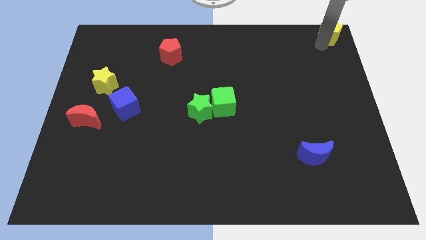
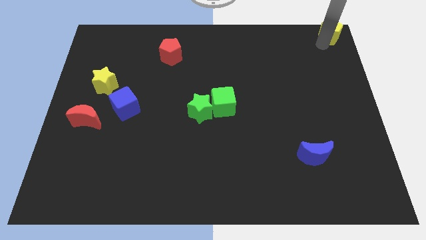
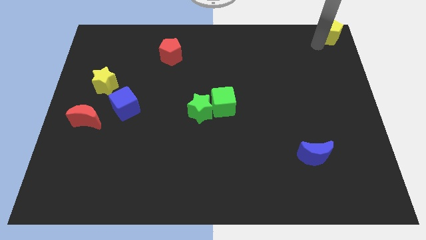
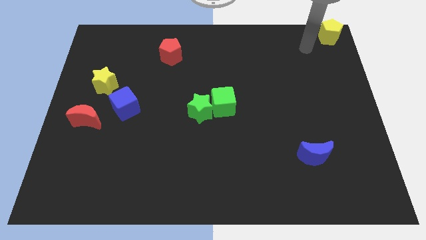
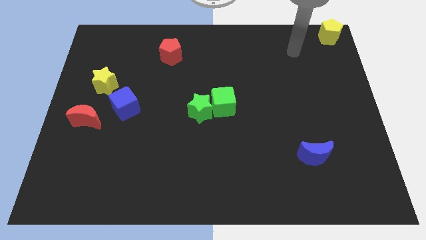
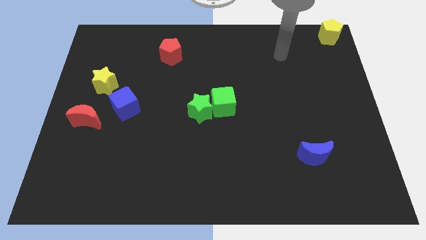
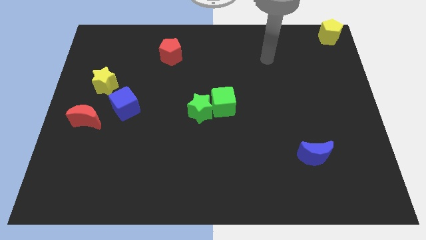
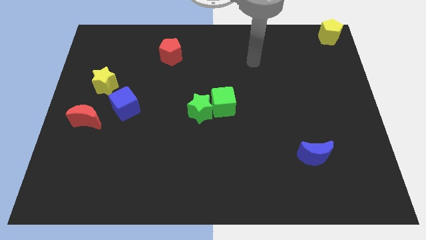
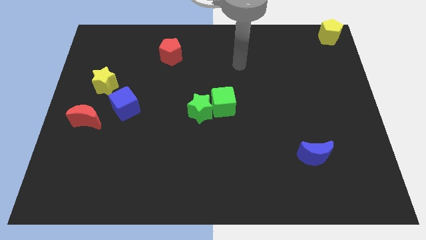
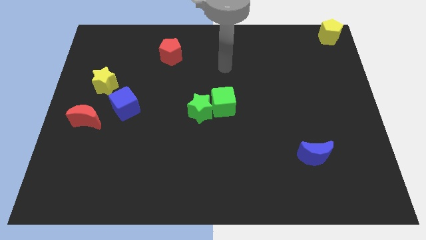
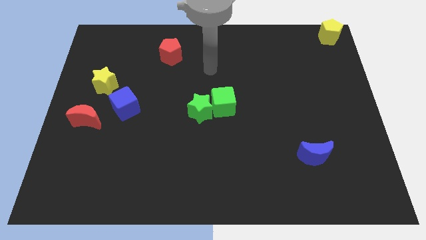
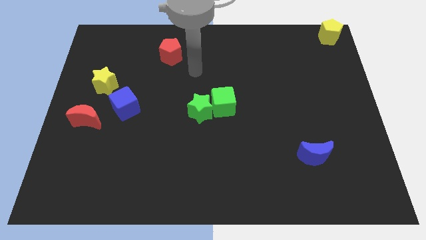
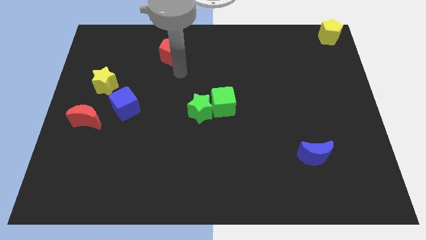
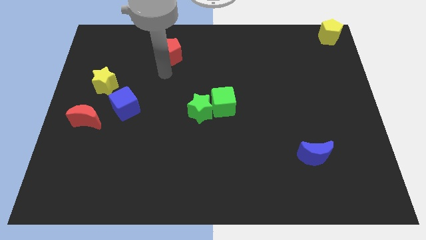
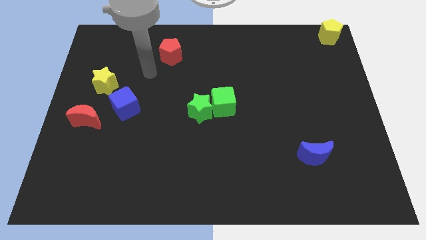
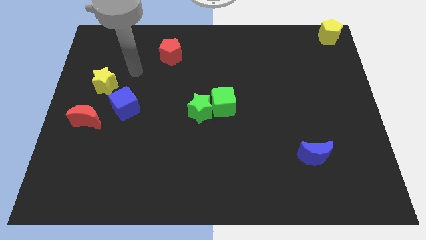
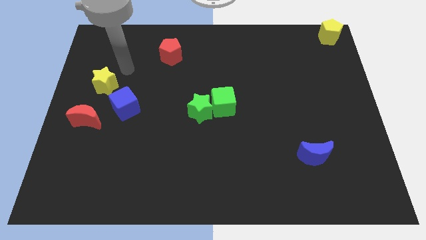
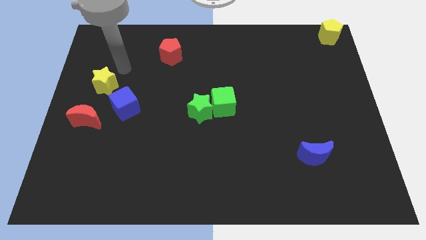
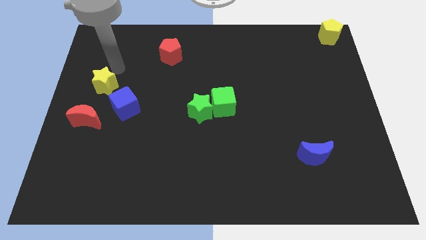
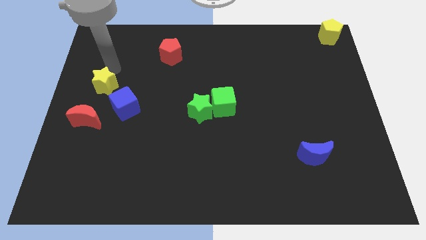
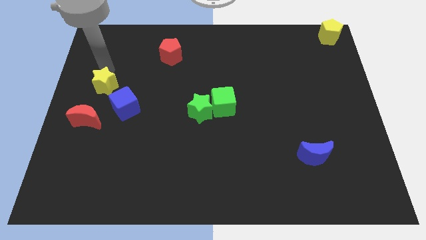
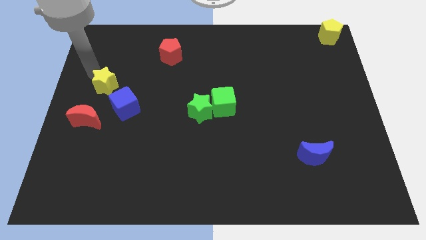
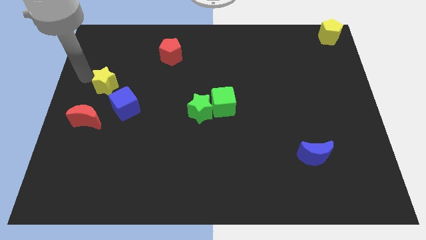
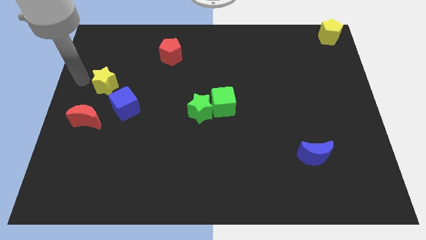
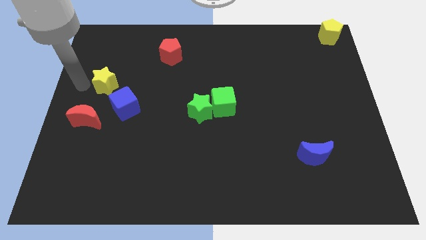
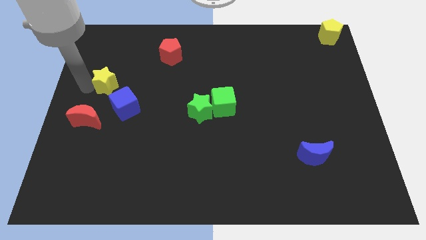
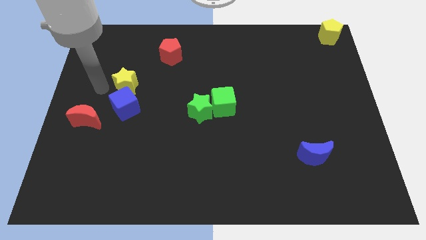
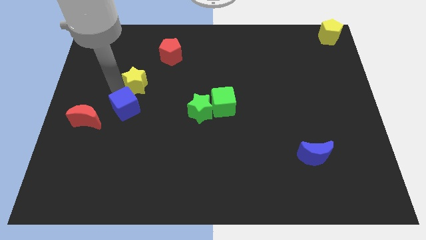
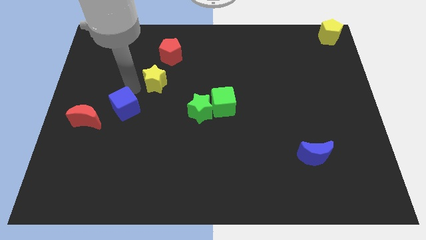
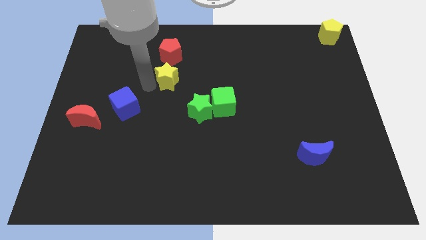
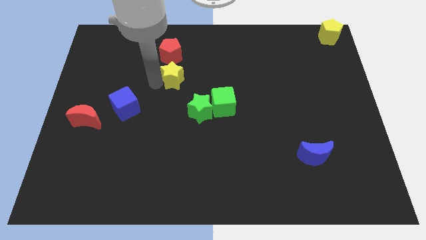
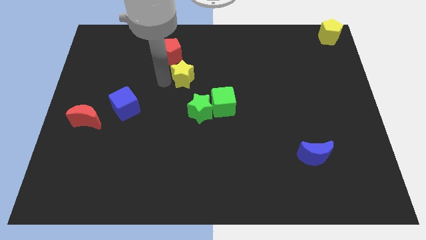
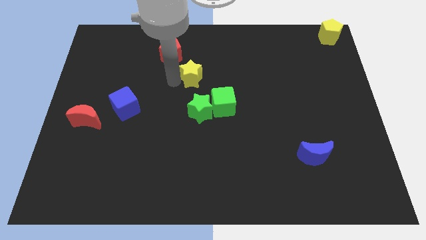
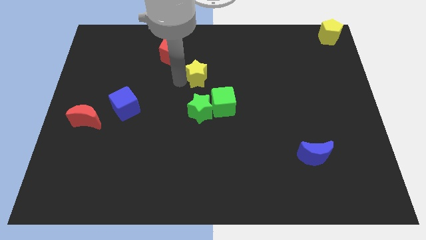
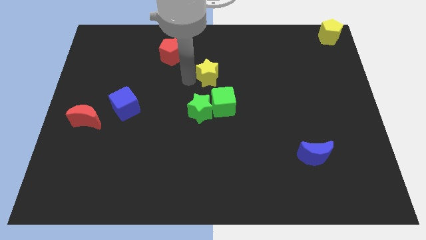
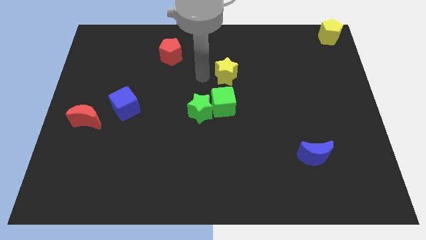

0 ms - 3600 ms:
drag the yellow star vertically to the top of the green cube

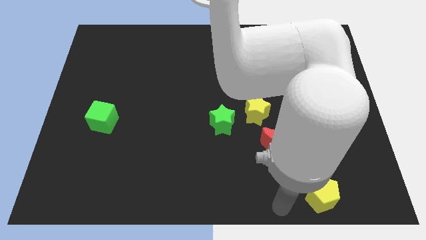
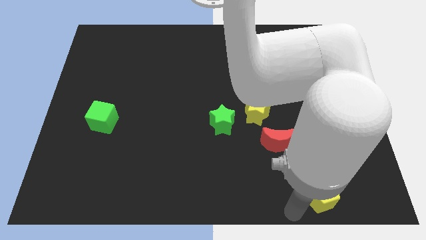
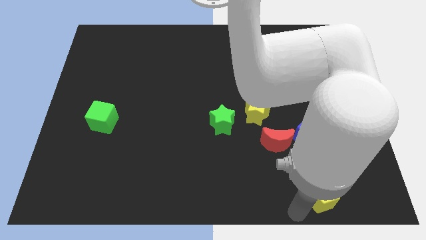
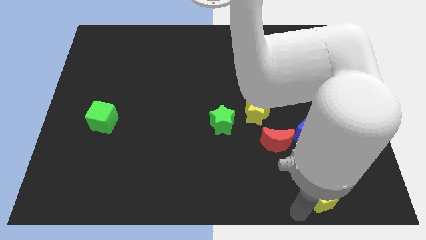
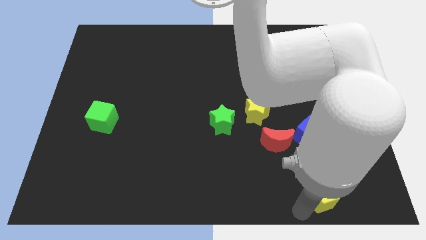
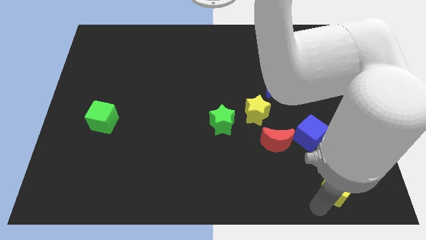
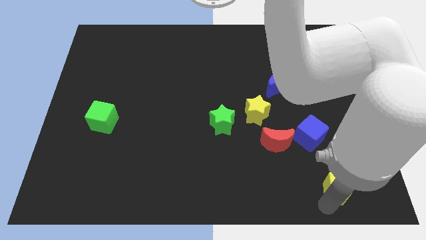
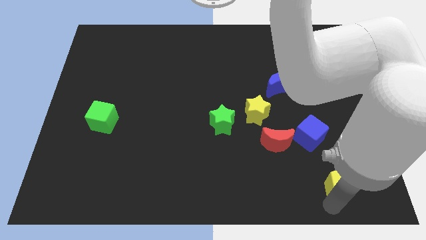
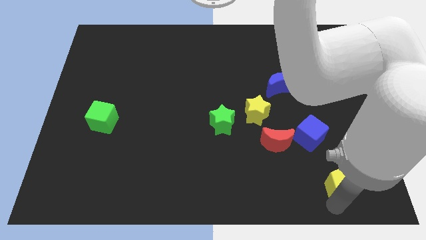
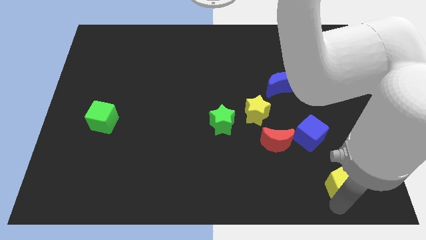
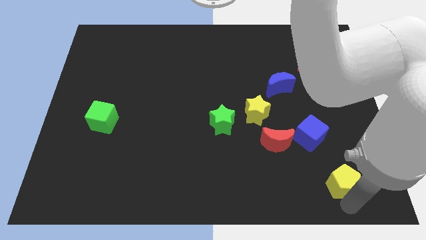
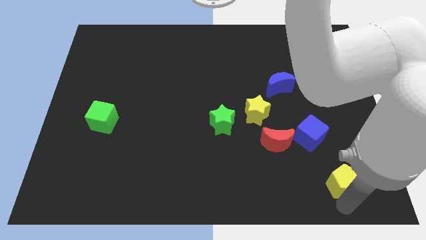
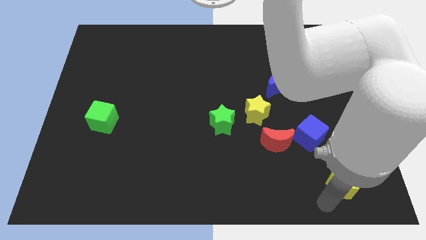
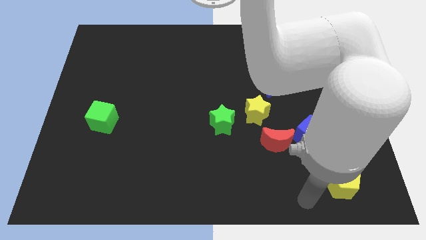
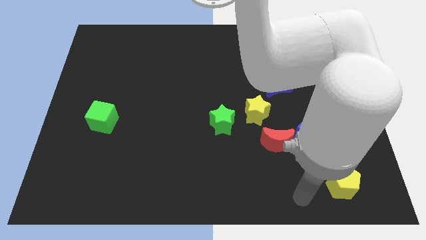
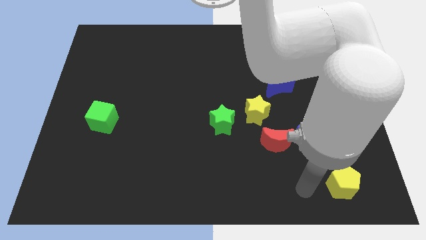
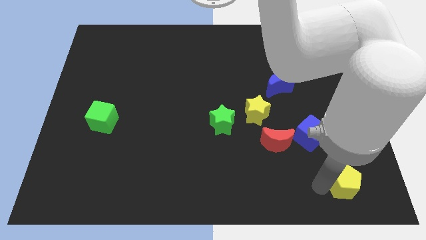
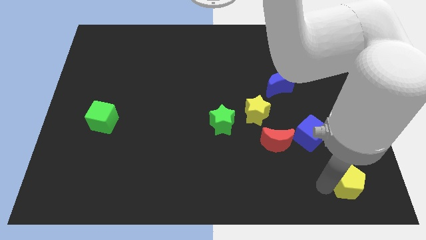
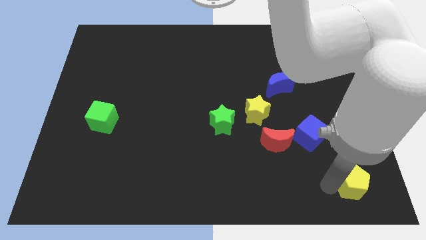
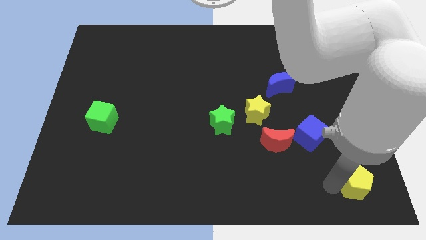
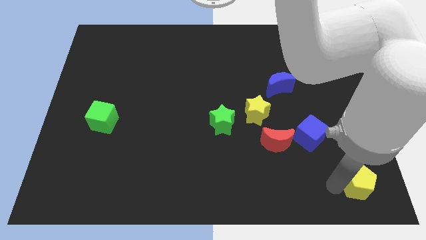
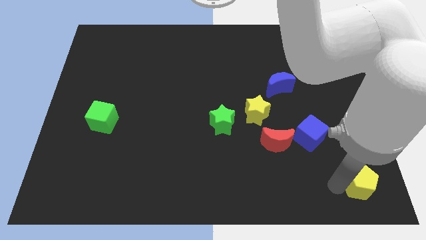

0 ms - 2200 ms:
push the yellow pentagon to the right side of the board

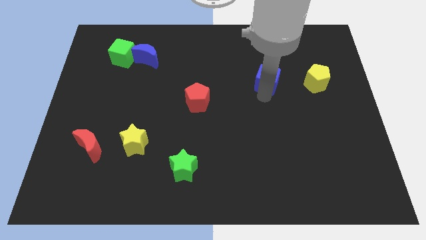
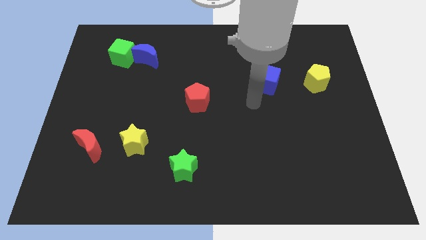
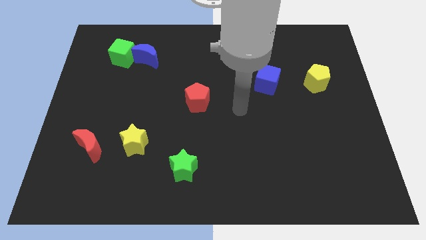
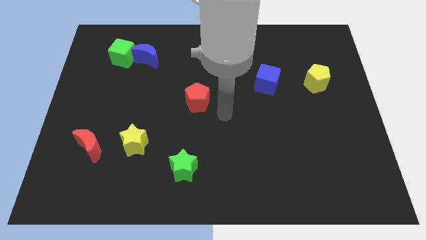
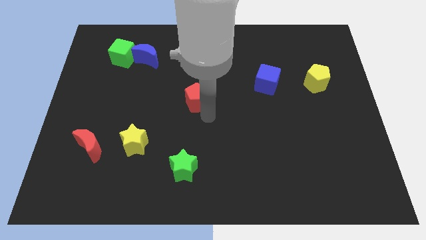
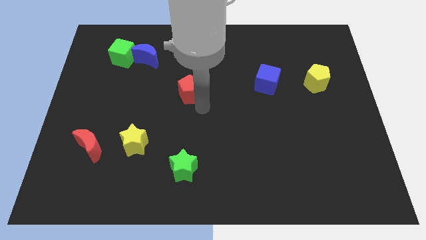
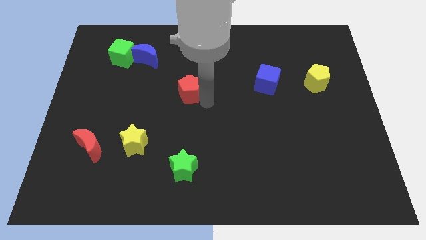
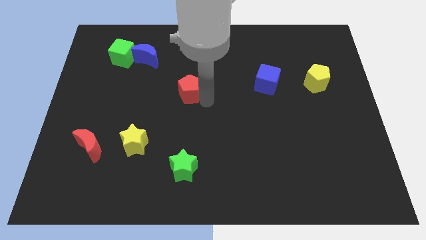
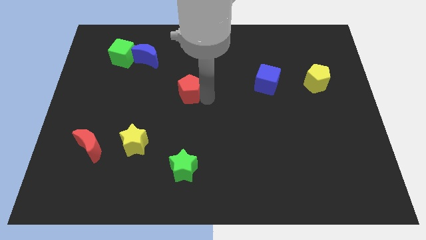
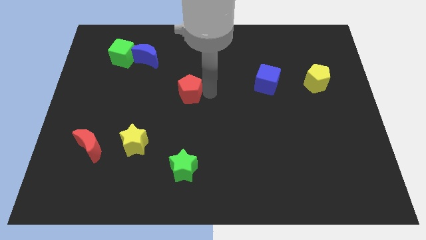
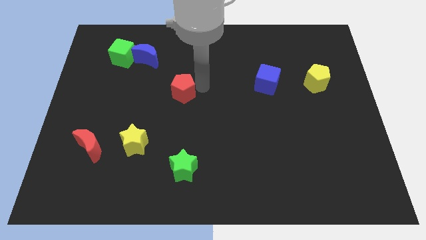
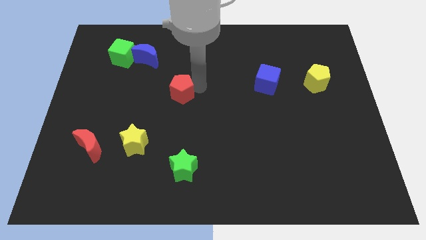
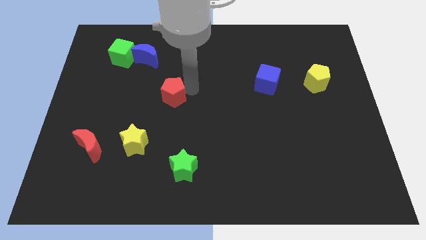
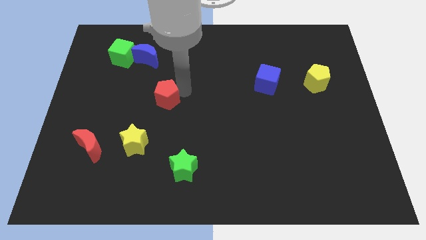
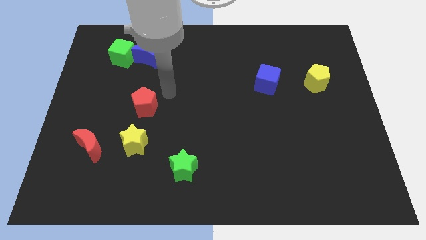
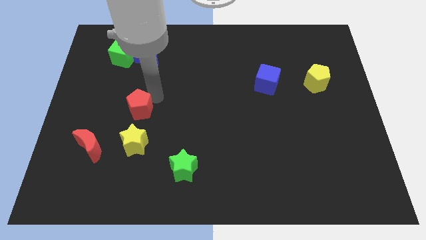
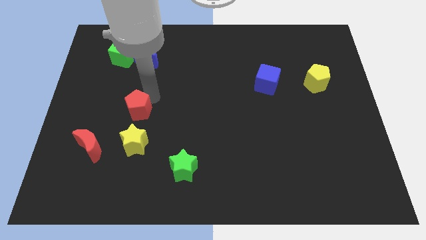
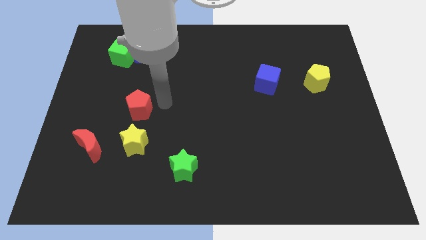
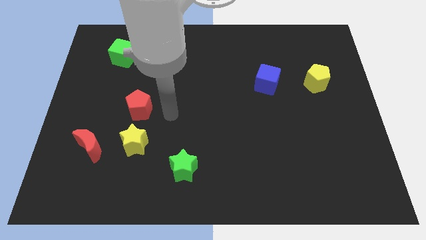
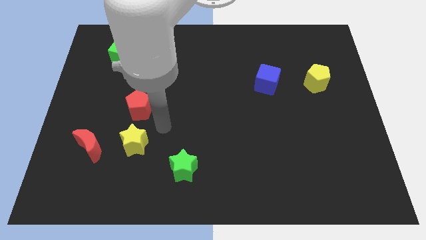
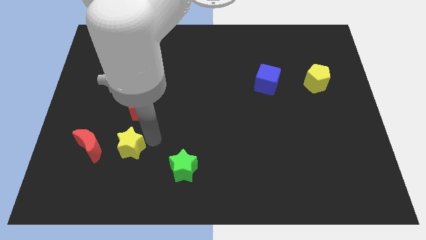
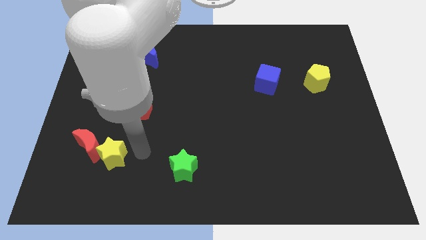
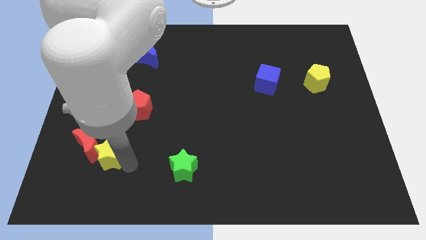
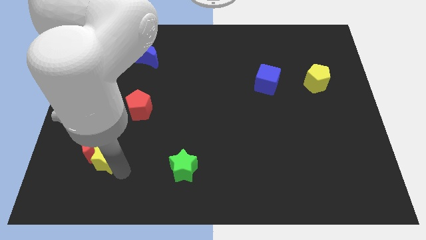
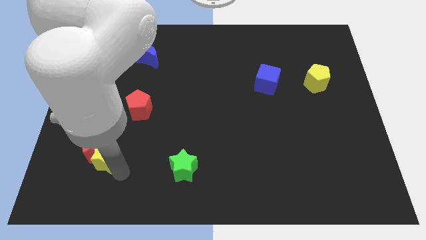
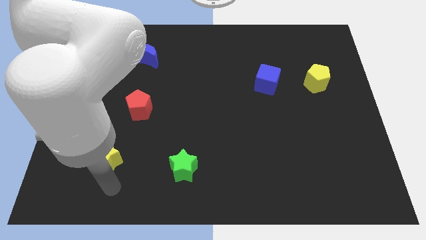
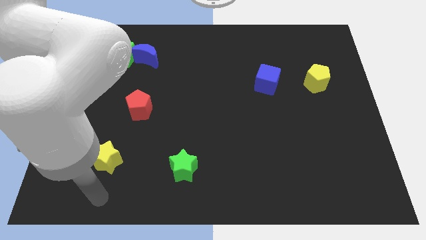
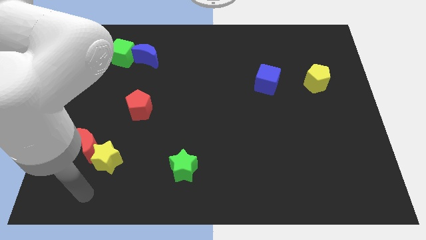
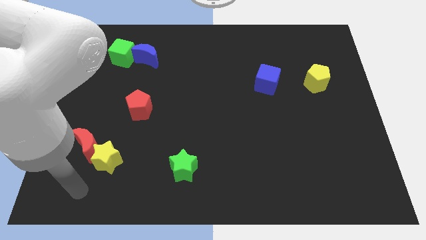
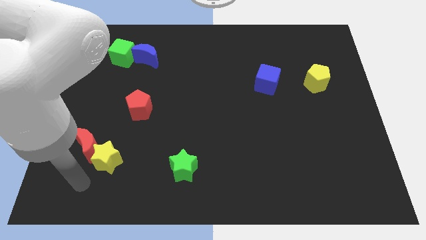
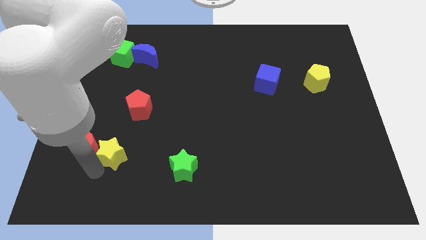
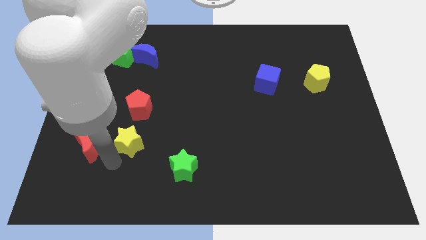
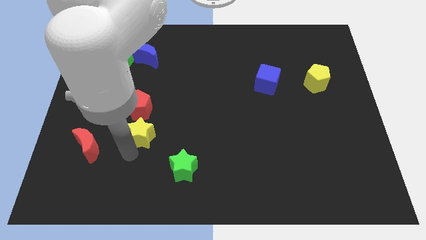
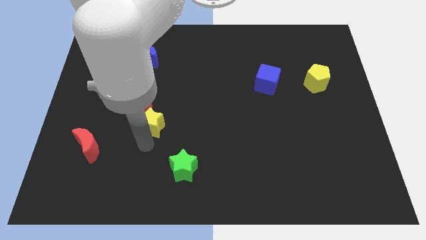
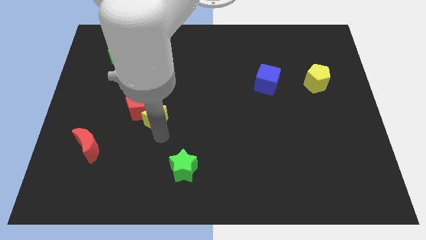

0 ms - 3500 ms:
push yellow star into red pentagon
